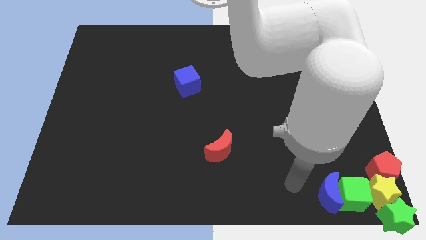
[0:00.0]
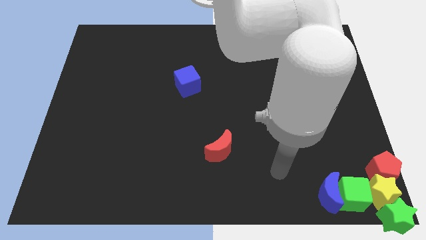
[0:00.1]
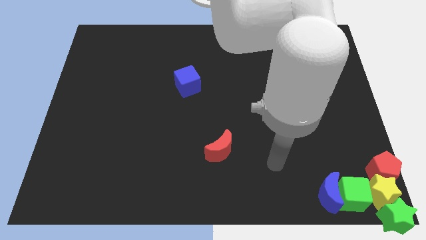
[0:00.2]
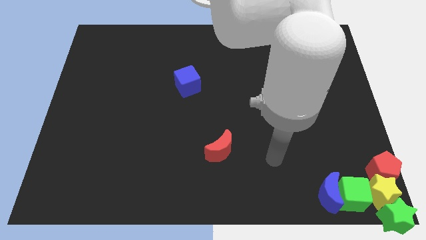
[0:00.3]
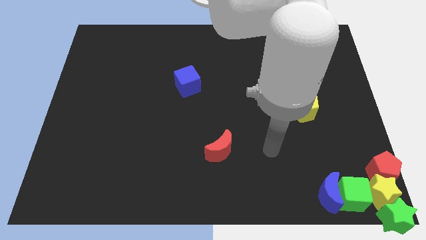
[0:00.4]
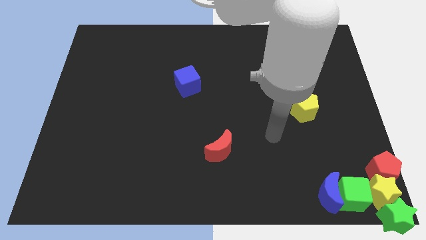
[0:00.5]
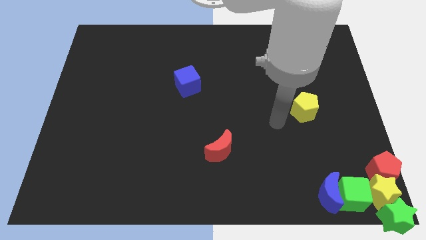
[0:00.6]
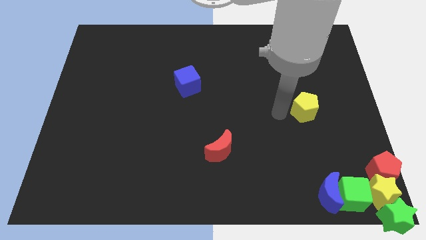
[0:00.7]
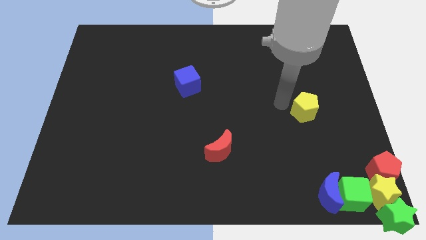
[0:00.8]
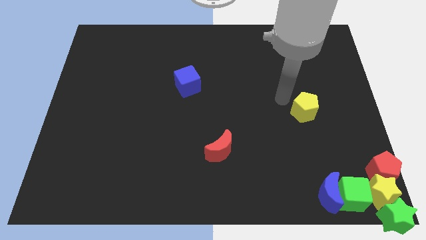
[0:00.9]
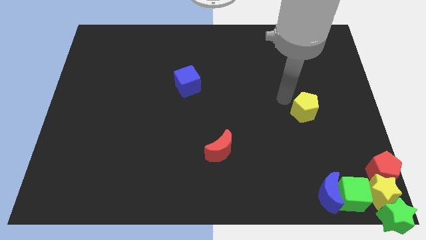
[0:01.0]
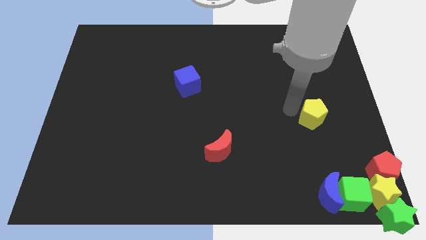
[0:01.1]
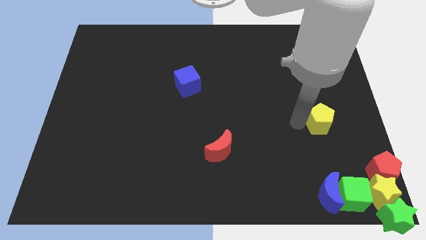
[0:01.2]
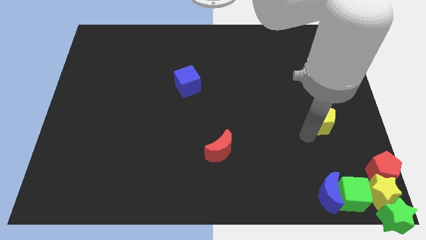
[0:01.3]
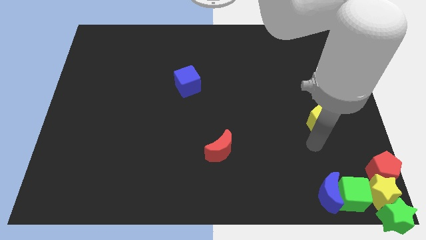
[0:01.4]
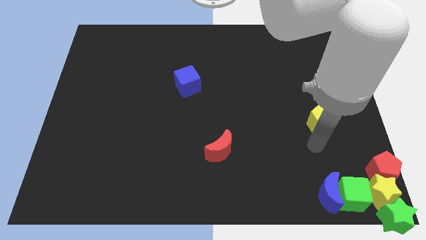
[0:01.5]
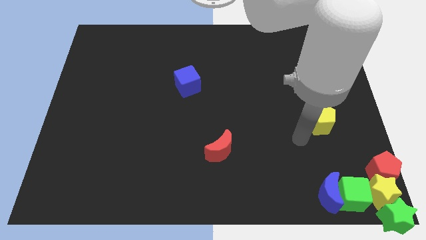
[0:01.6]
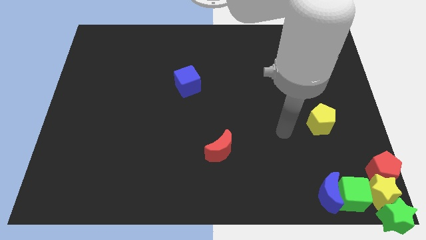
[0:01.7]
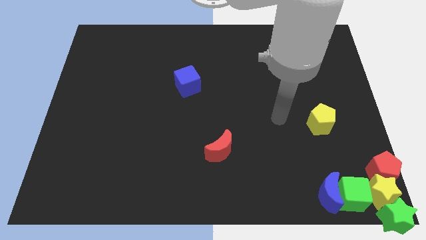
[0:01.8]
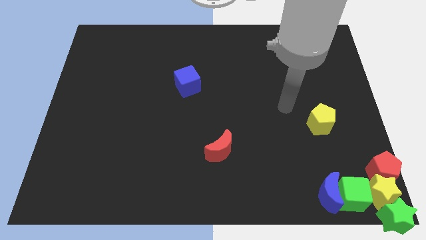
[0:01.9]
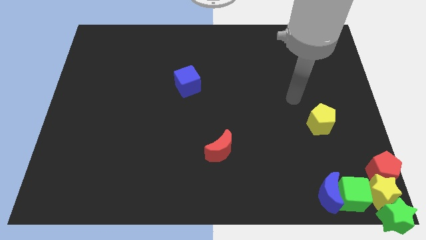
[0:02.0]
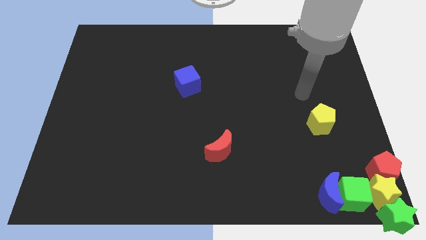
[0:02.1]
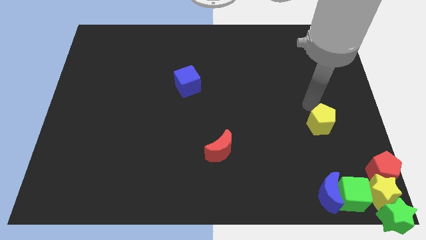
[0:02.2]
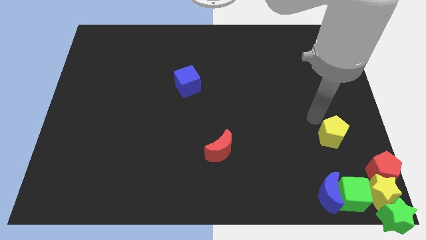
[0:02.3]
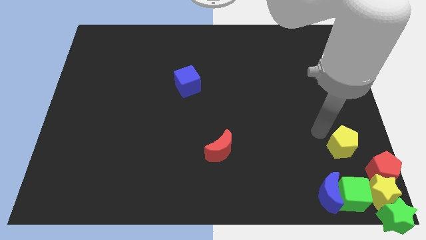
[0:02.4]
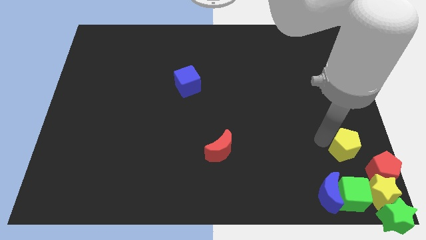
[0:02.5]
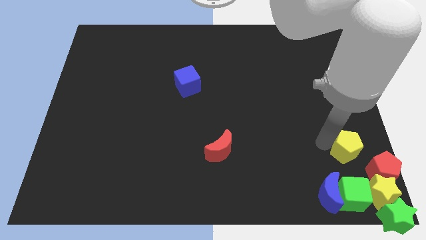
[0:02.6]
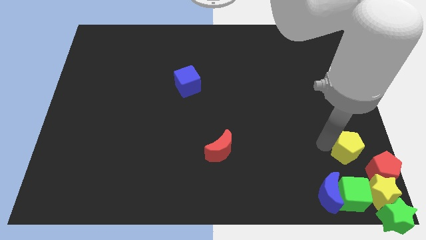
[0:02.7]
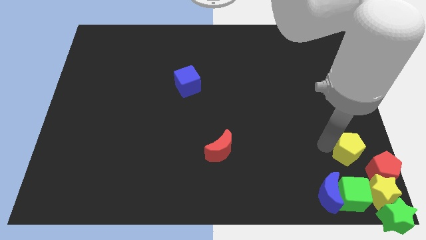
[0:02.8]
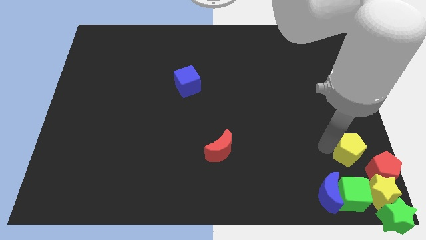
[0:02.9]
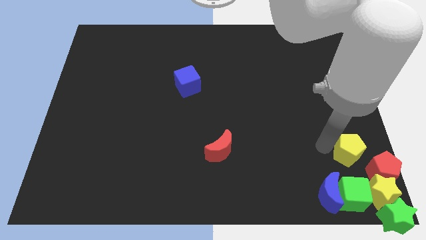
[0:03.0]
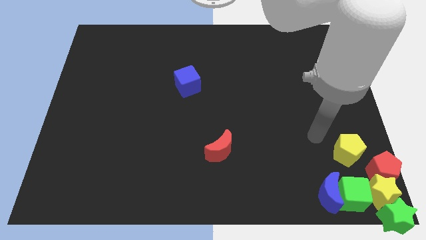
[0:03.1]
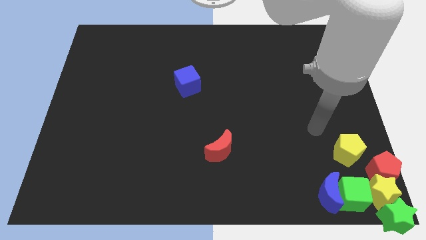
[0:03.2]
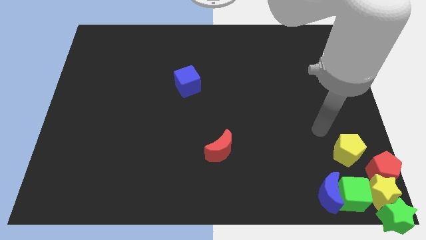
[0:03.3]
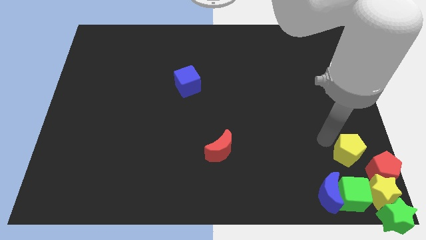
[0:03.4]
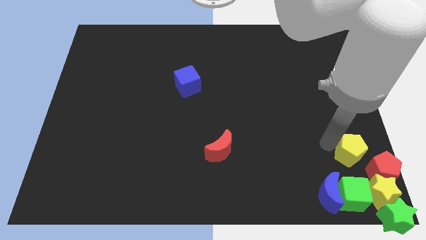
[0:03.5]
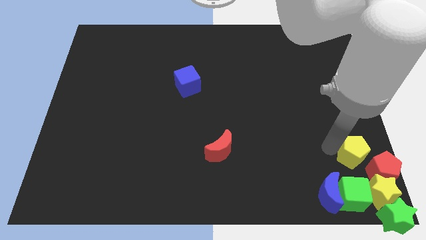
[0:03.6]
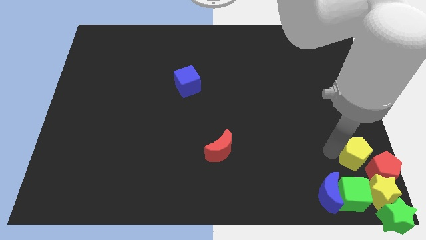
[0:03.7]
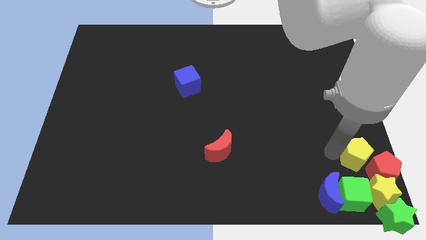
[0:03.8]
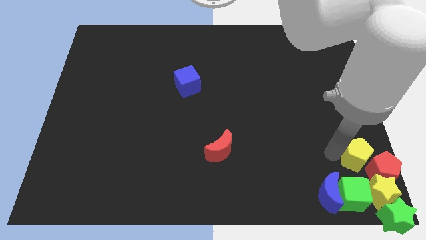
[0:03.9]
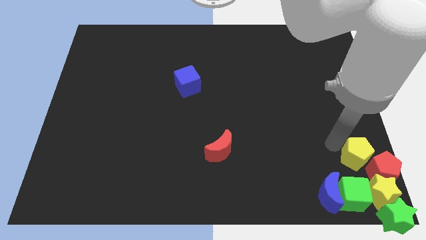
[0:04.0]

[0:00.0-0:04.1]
place the yellow pentagon above the green cube

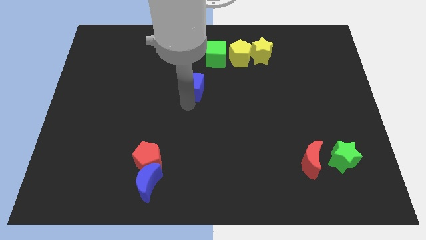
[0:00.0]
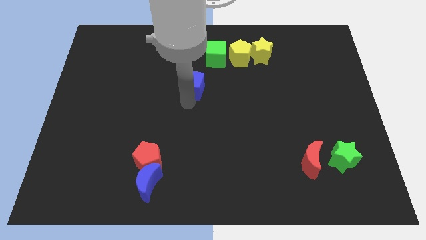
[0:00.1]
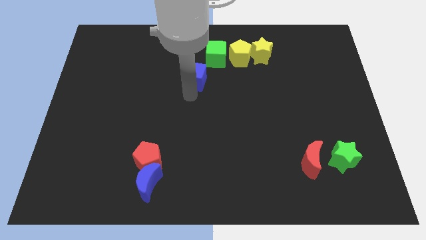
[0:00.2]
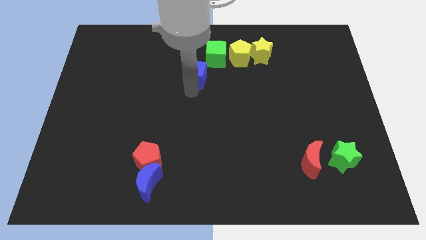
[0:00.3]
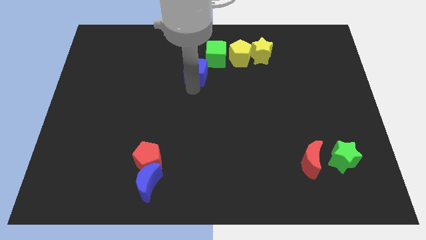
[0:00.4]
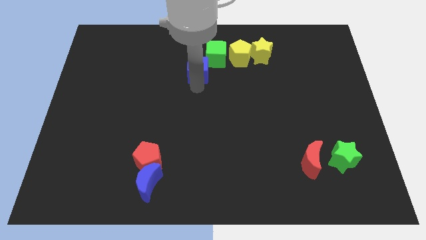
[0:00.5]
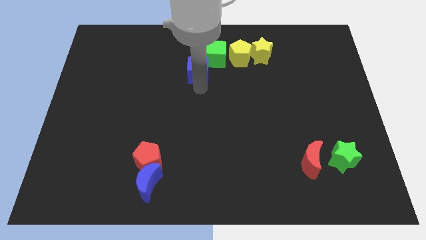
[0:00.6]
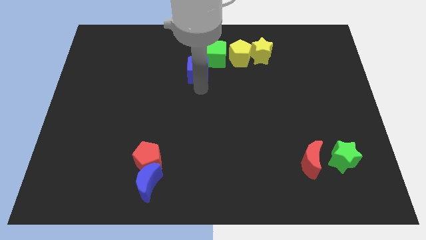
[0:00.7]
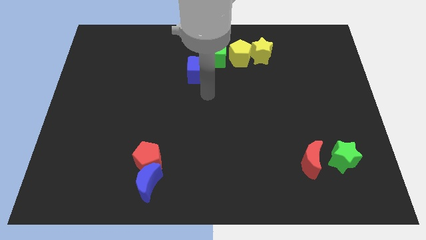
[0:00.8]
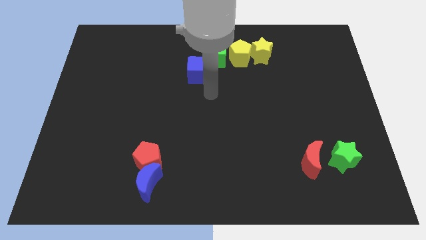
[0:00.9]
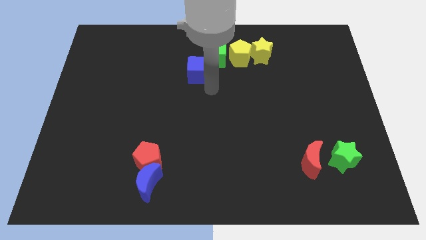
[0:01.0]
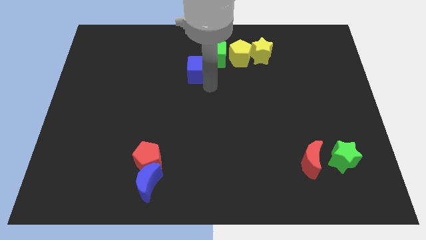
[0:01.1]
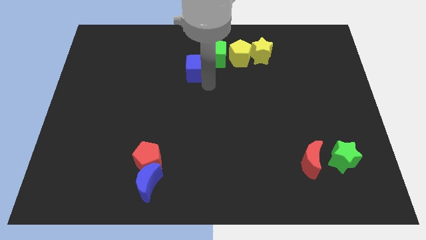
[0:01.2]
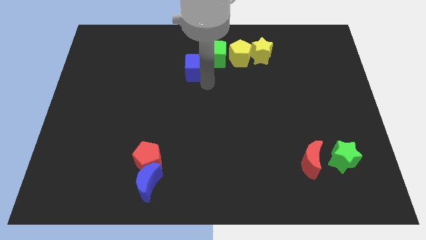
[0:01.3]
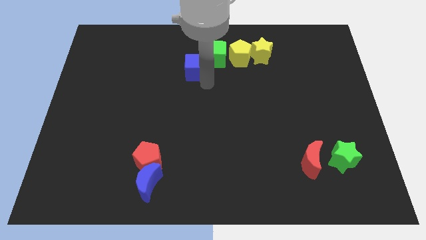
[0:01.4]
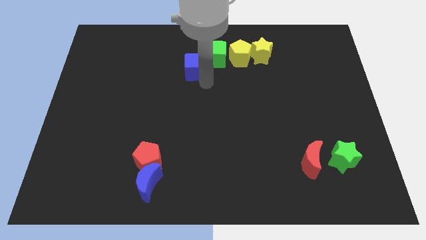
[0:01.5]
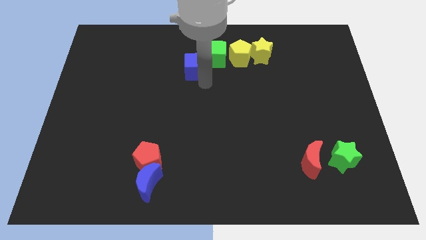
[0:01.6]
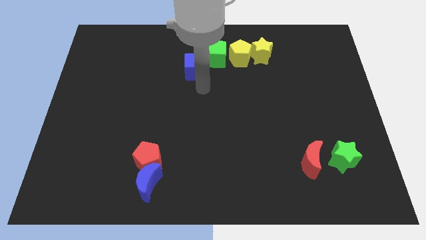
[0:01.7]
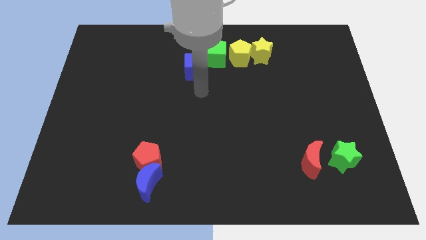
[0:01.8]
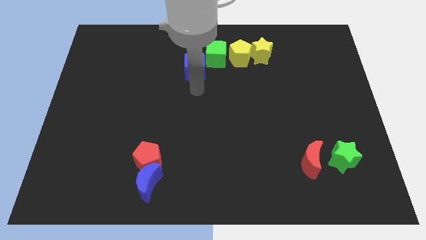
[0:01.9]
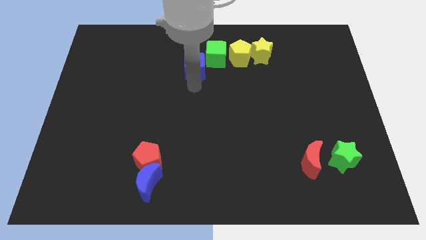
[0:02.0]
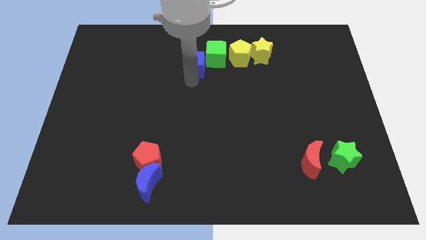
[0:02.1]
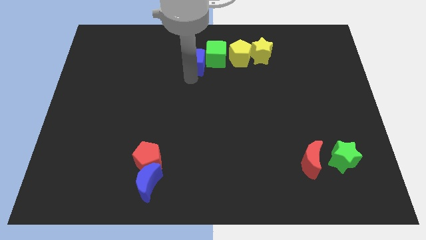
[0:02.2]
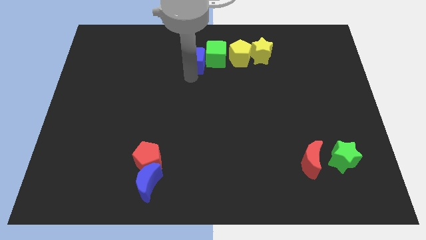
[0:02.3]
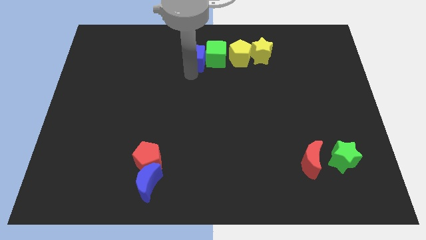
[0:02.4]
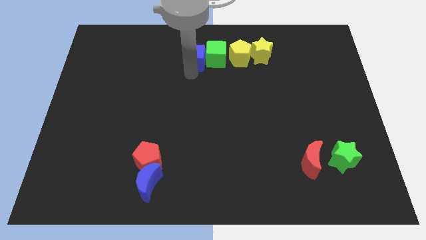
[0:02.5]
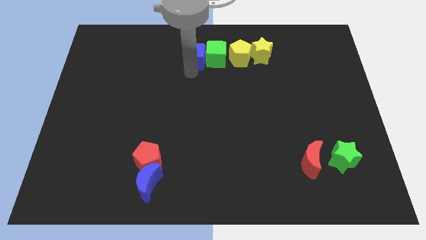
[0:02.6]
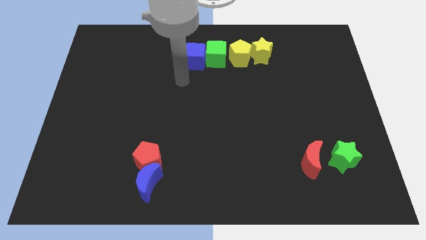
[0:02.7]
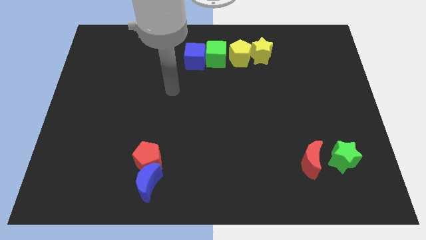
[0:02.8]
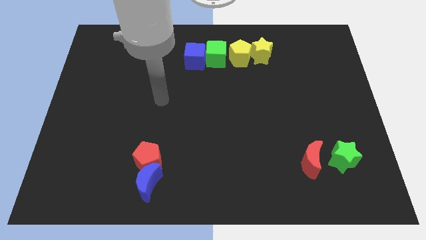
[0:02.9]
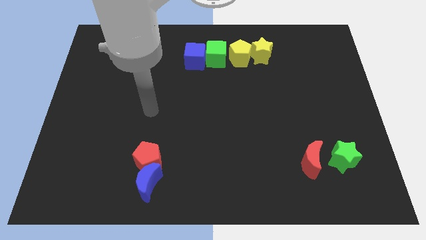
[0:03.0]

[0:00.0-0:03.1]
move blue cube left of the green cube

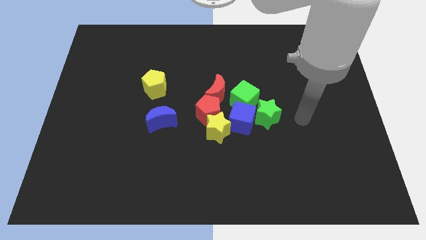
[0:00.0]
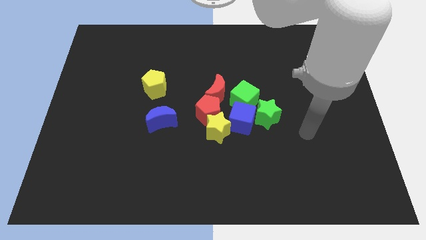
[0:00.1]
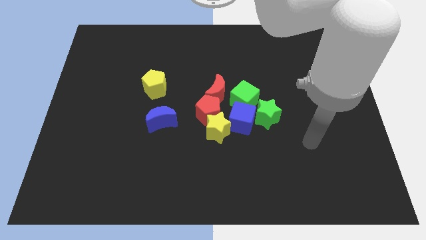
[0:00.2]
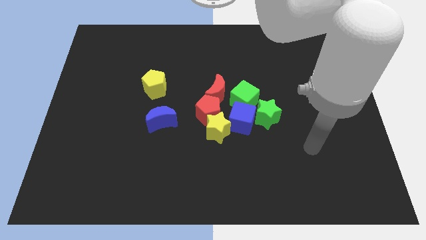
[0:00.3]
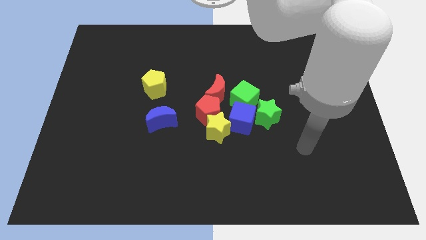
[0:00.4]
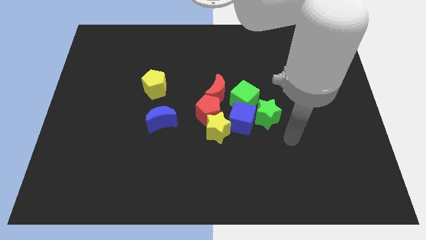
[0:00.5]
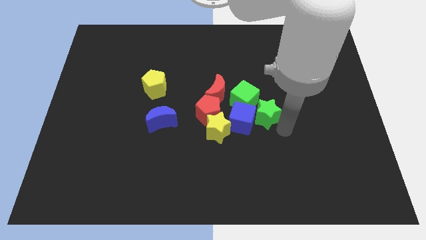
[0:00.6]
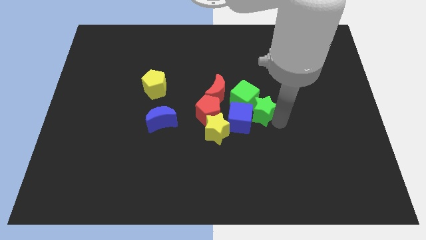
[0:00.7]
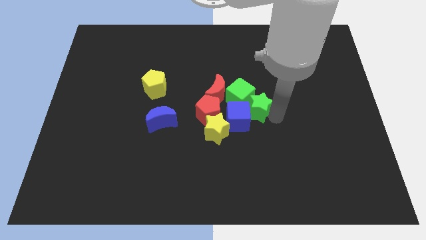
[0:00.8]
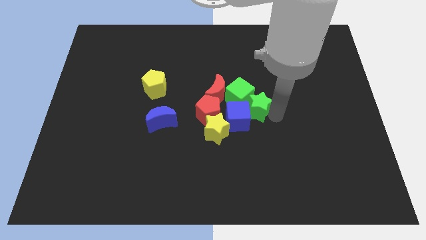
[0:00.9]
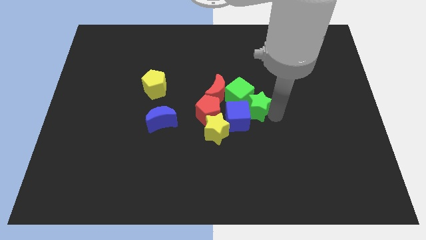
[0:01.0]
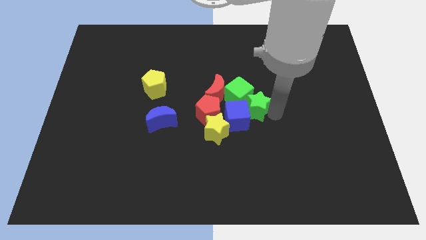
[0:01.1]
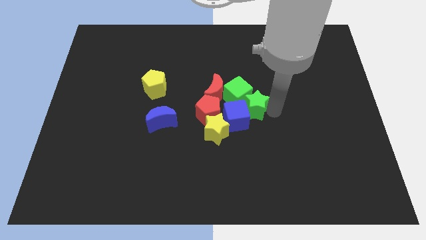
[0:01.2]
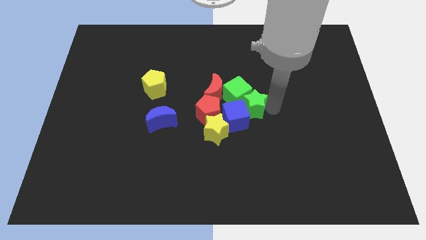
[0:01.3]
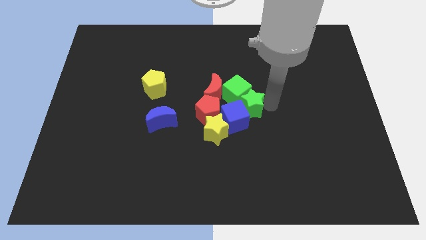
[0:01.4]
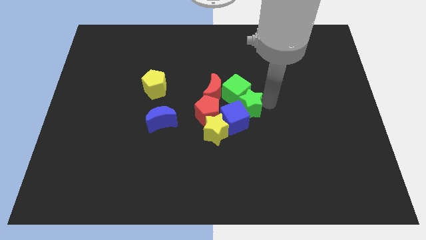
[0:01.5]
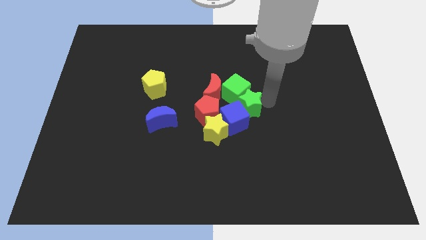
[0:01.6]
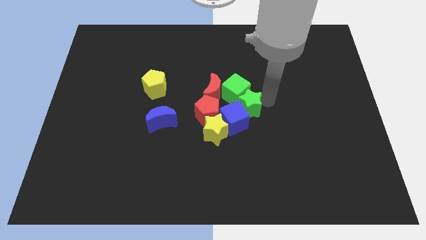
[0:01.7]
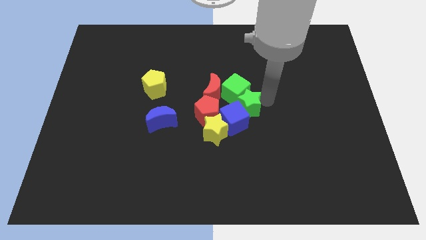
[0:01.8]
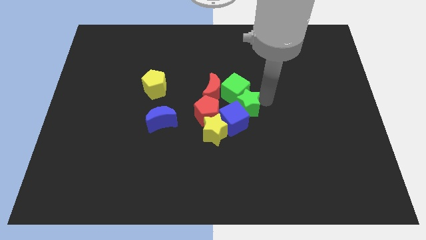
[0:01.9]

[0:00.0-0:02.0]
push the green star into the group of blocks
